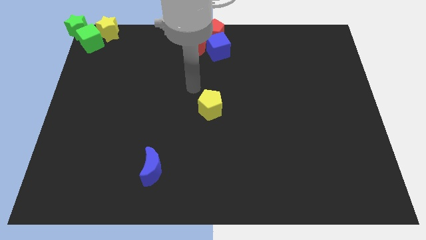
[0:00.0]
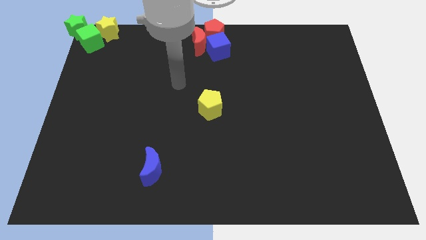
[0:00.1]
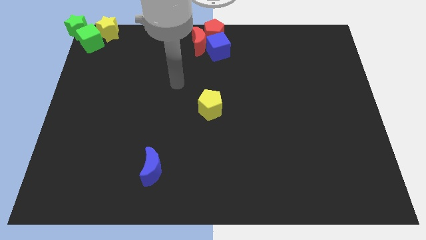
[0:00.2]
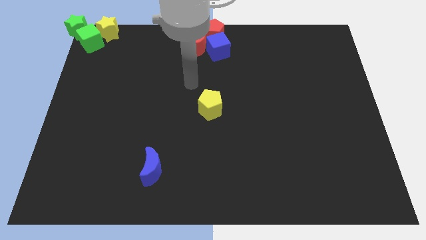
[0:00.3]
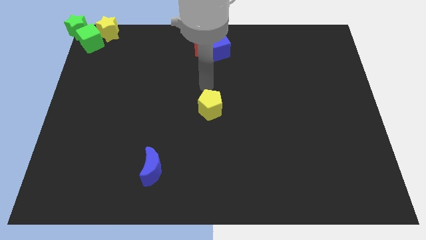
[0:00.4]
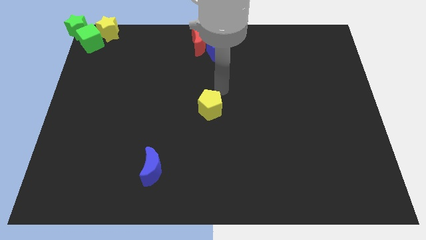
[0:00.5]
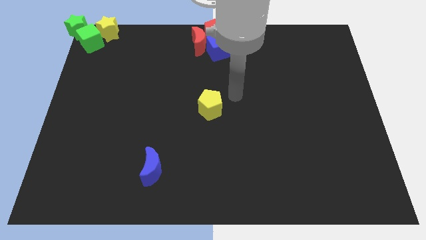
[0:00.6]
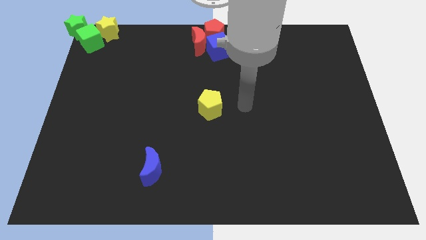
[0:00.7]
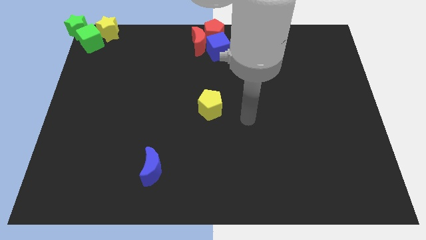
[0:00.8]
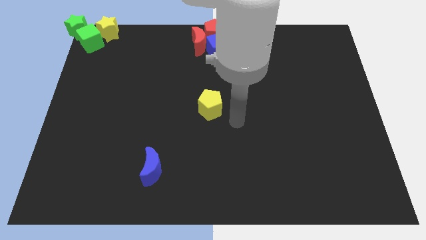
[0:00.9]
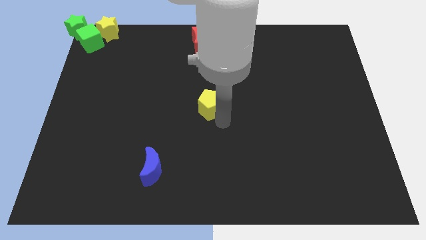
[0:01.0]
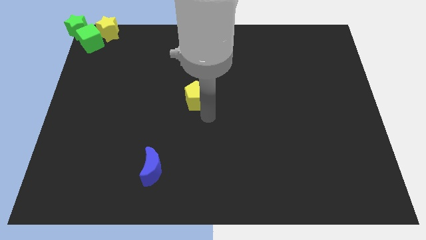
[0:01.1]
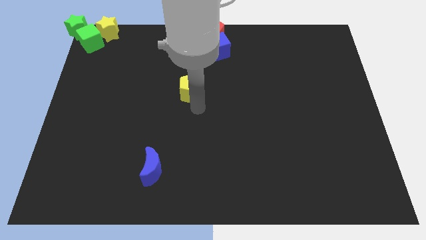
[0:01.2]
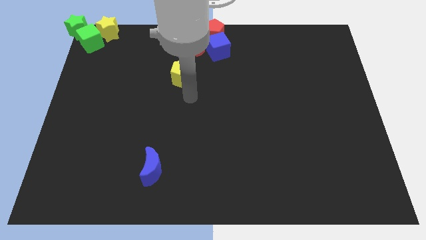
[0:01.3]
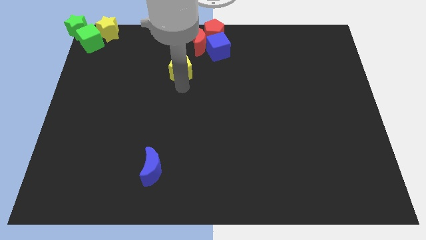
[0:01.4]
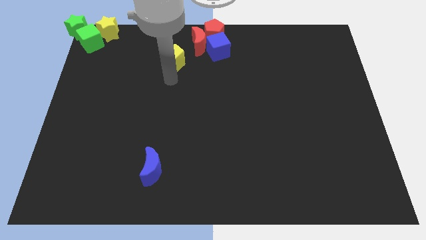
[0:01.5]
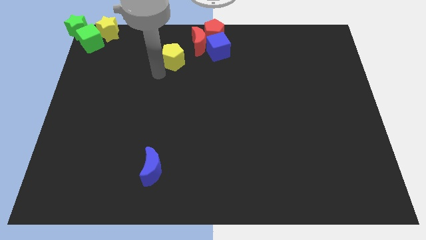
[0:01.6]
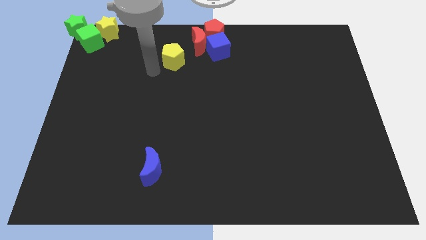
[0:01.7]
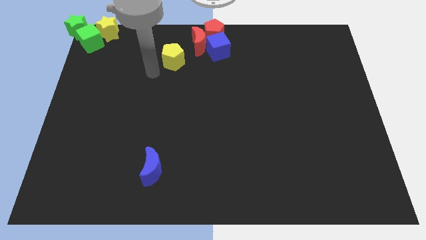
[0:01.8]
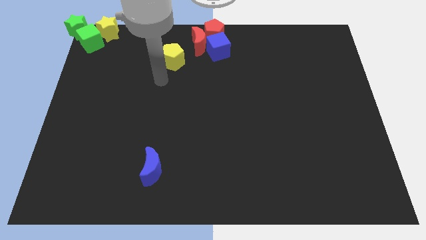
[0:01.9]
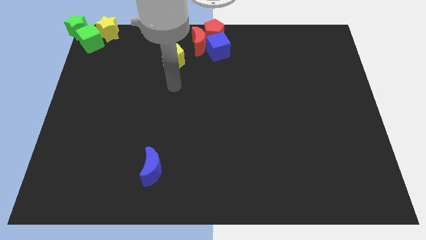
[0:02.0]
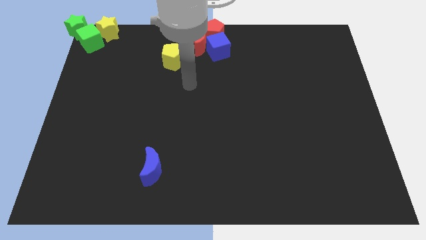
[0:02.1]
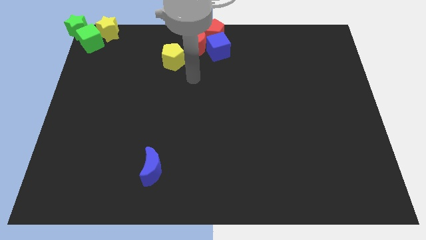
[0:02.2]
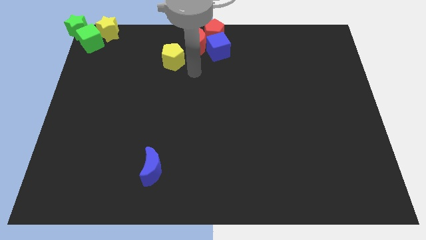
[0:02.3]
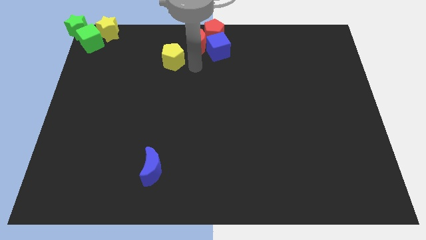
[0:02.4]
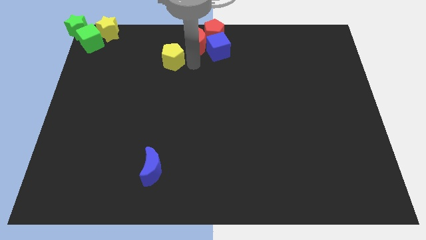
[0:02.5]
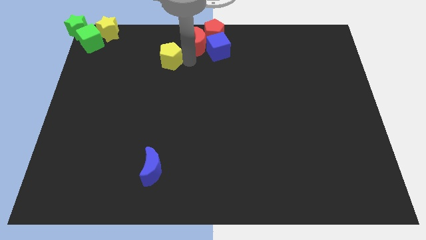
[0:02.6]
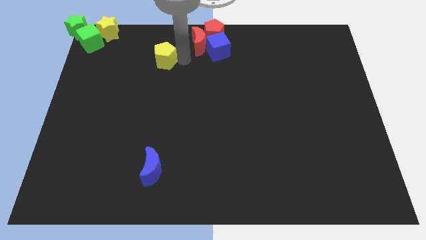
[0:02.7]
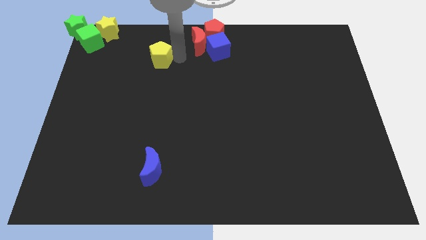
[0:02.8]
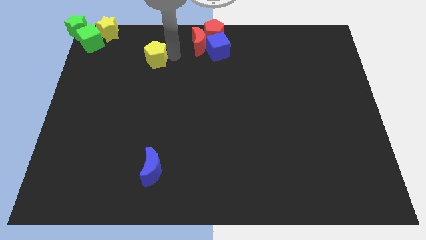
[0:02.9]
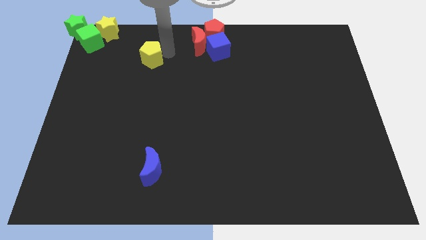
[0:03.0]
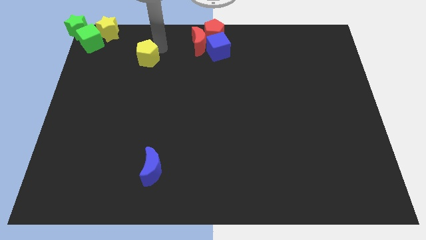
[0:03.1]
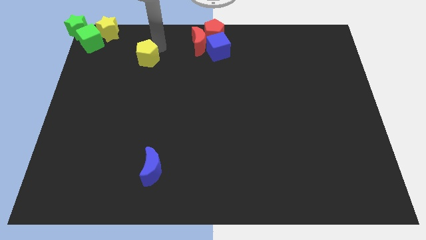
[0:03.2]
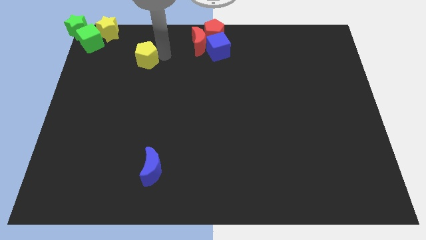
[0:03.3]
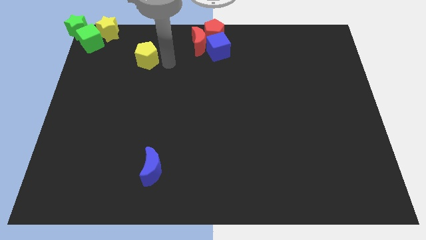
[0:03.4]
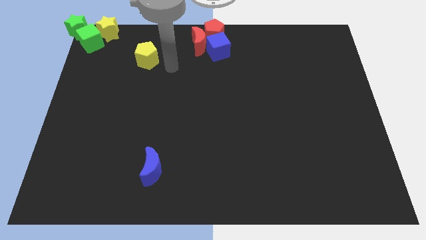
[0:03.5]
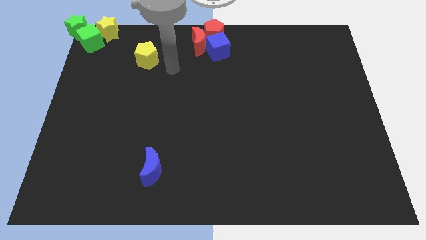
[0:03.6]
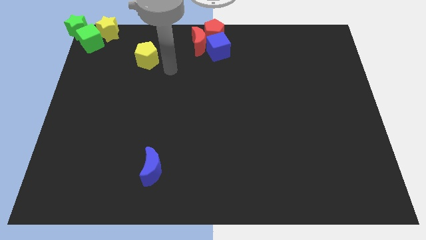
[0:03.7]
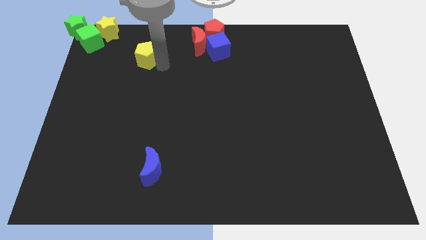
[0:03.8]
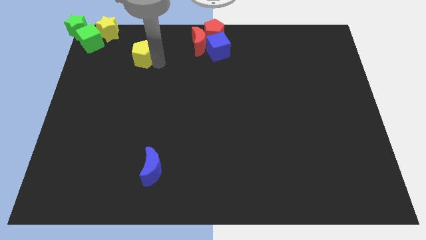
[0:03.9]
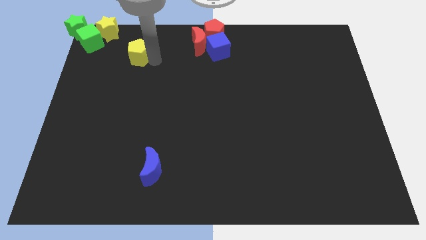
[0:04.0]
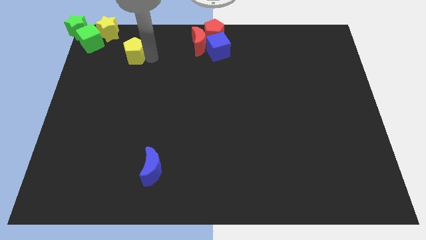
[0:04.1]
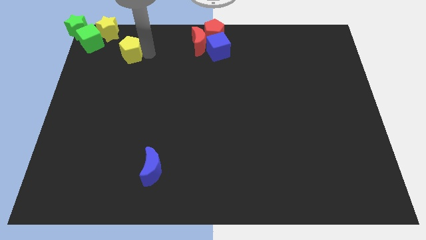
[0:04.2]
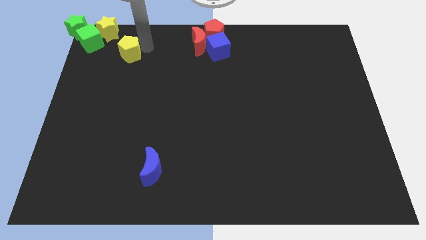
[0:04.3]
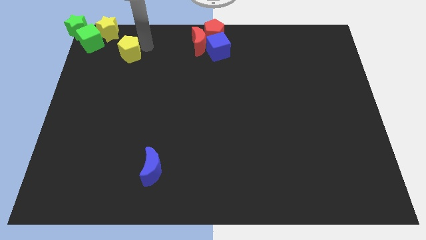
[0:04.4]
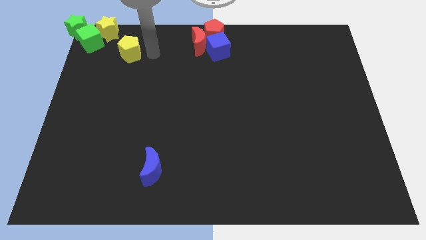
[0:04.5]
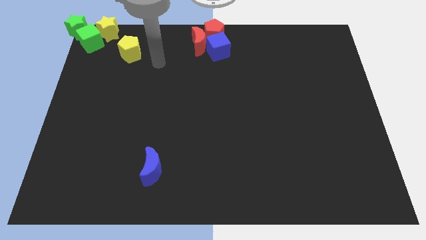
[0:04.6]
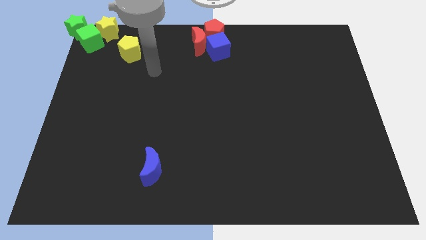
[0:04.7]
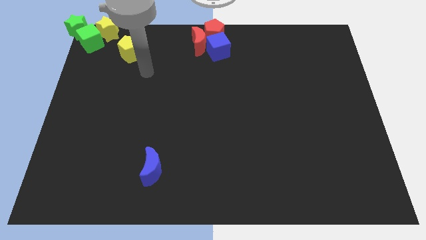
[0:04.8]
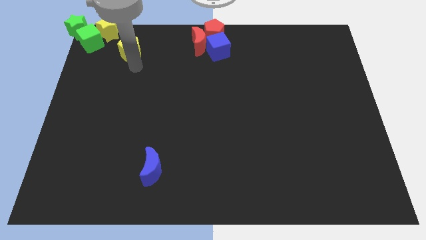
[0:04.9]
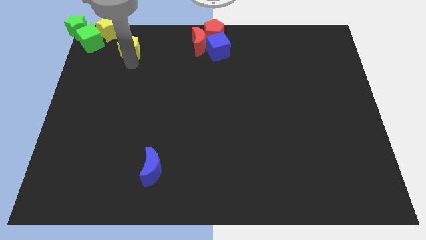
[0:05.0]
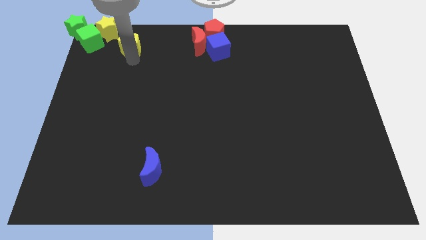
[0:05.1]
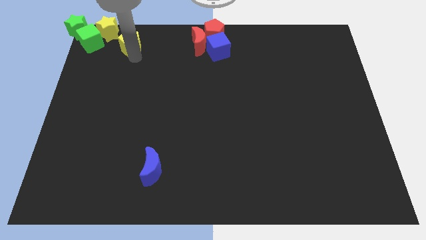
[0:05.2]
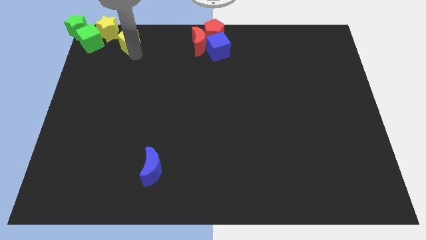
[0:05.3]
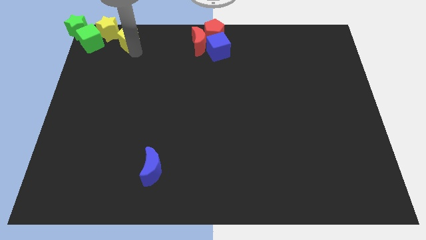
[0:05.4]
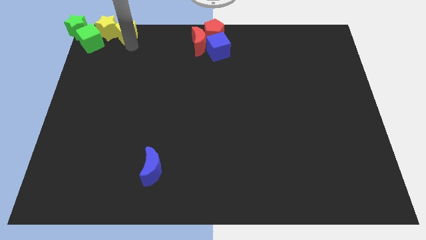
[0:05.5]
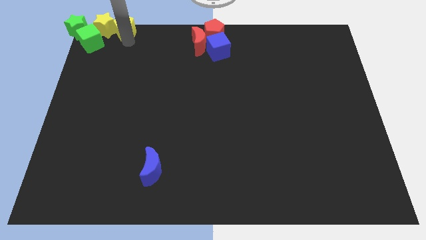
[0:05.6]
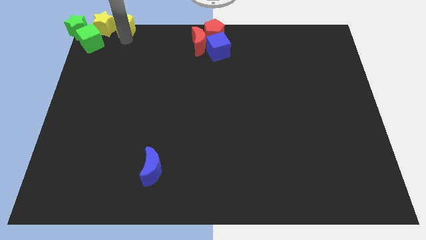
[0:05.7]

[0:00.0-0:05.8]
move the yellow pentagon into the yellow star

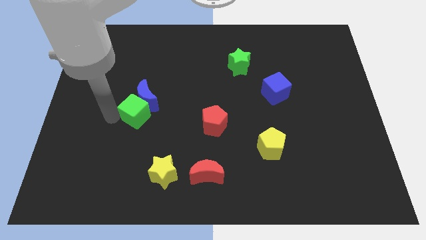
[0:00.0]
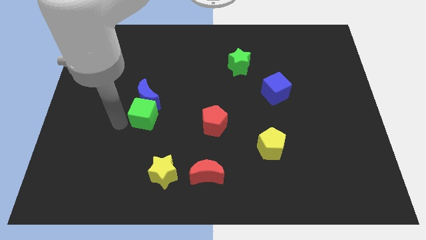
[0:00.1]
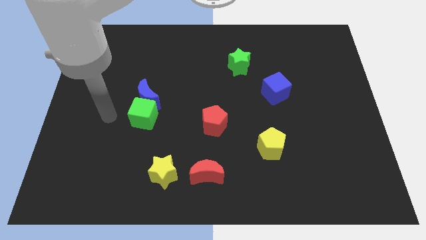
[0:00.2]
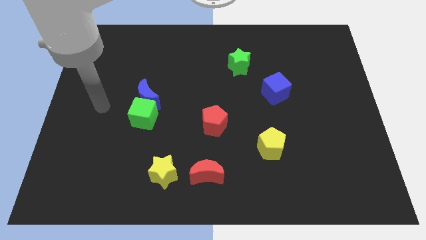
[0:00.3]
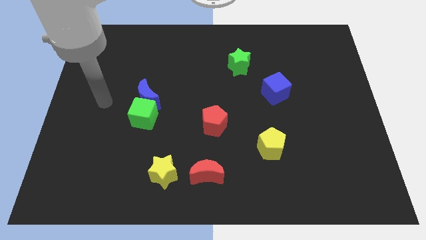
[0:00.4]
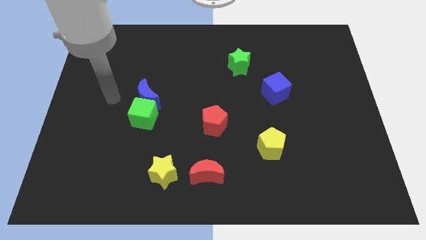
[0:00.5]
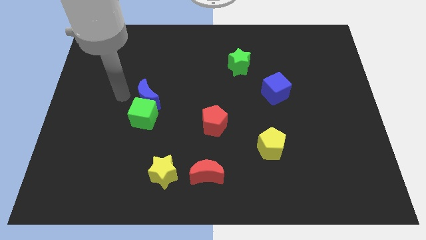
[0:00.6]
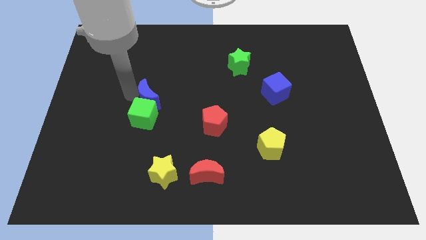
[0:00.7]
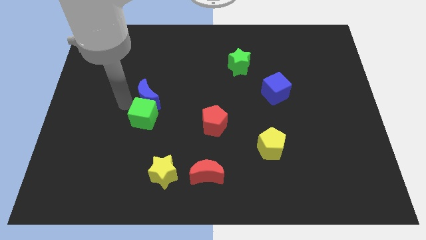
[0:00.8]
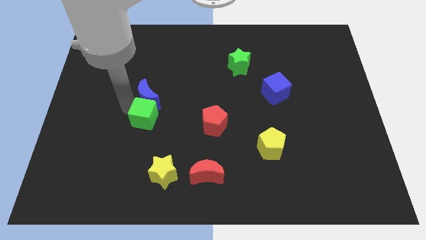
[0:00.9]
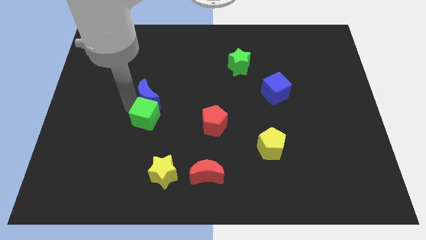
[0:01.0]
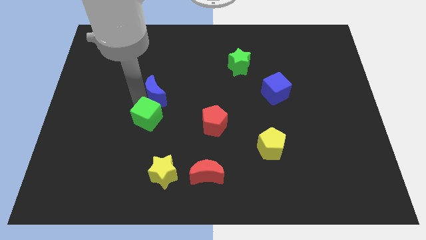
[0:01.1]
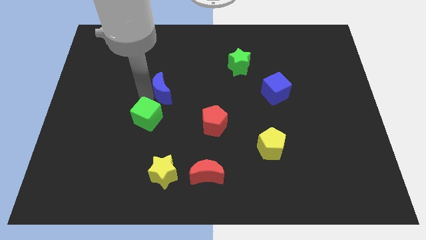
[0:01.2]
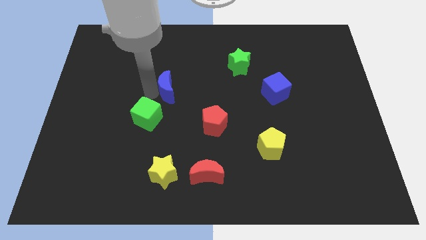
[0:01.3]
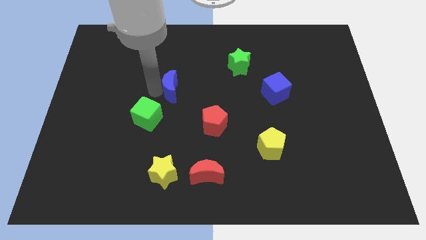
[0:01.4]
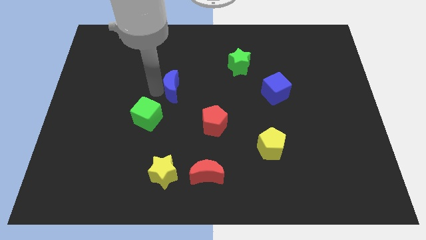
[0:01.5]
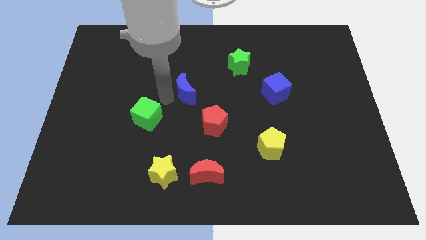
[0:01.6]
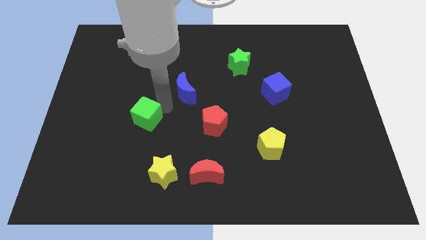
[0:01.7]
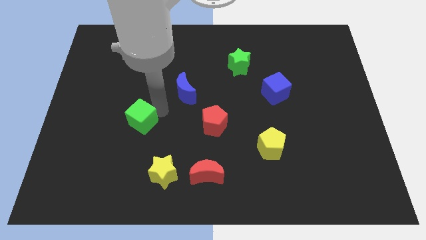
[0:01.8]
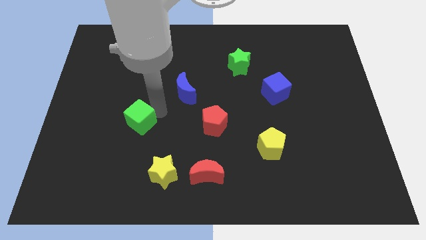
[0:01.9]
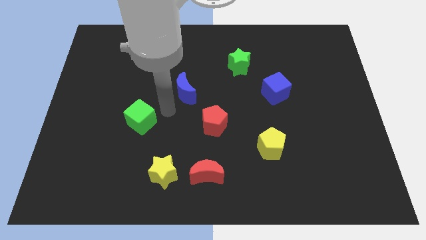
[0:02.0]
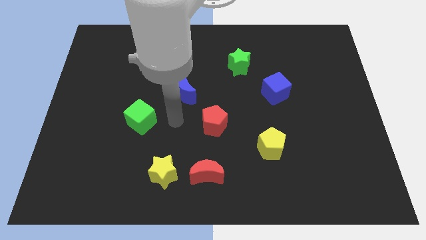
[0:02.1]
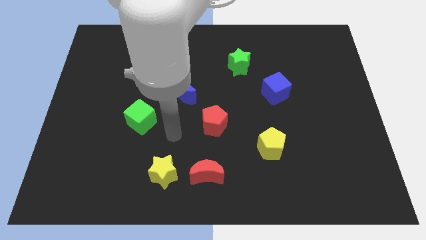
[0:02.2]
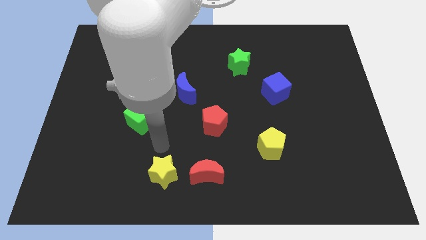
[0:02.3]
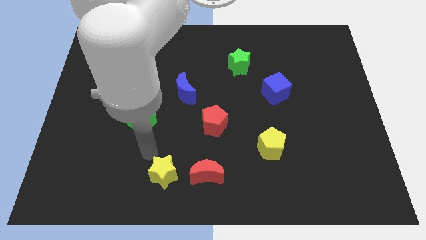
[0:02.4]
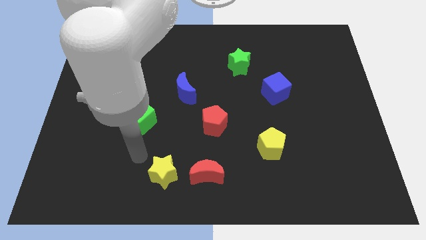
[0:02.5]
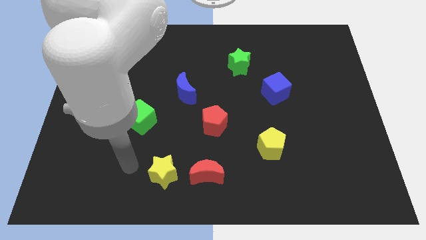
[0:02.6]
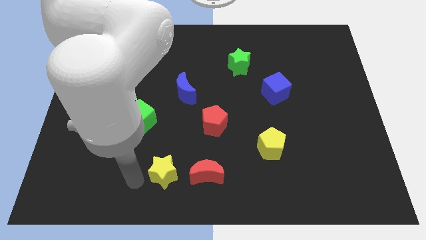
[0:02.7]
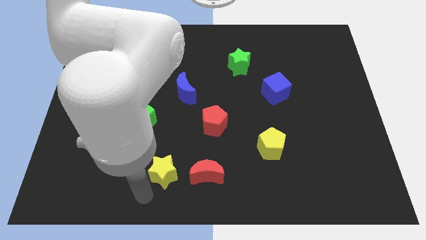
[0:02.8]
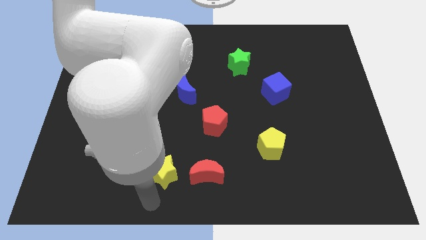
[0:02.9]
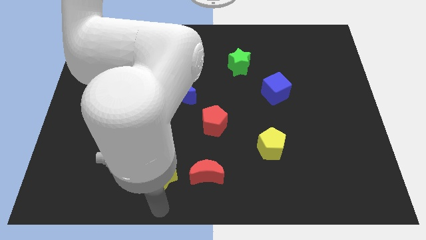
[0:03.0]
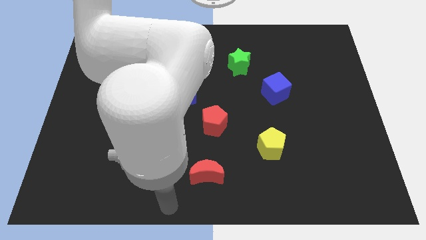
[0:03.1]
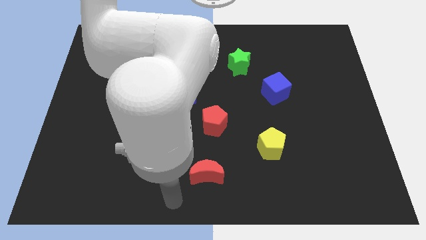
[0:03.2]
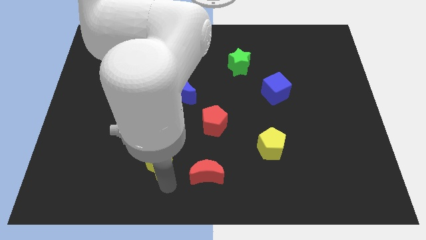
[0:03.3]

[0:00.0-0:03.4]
separate the green cube and blue crescent from each other
